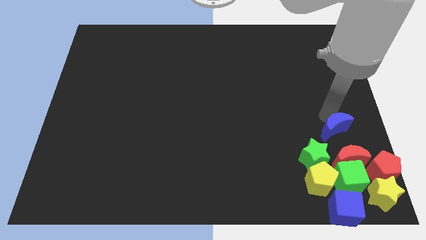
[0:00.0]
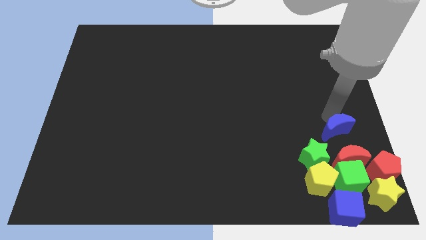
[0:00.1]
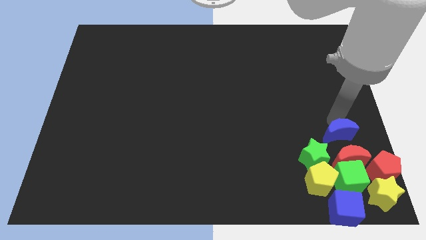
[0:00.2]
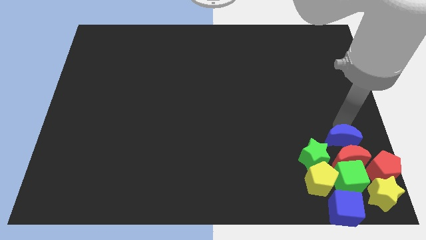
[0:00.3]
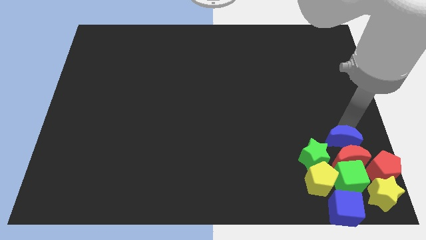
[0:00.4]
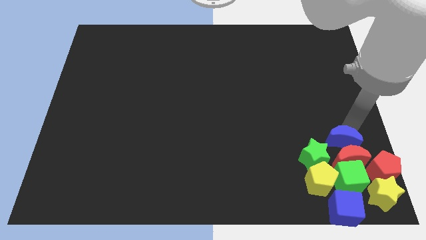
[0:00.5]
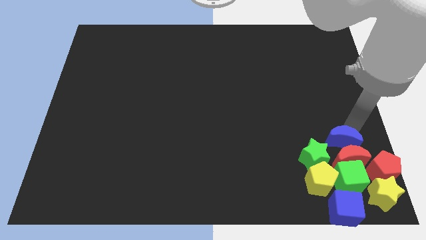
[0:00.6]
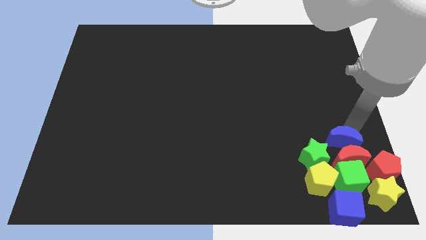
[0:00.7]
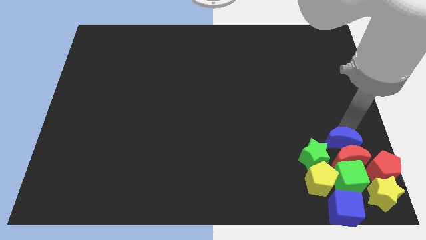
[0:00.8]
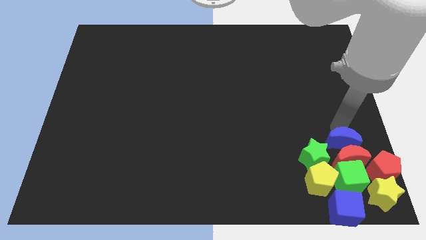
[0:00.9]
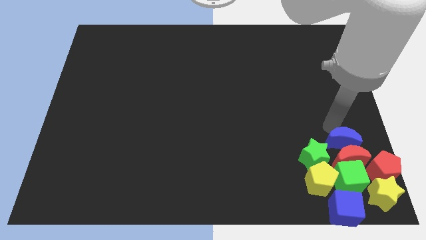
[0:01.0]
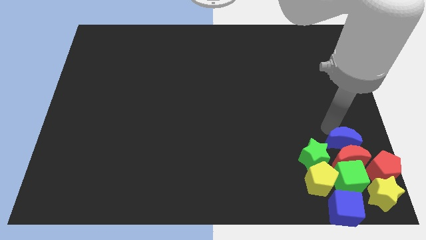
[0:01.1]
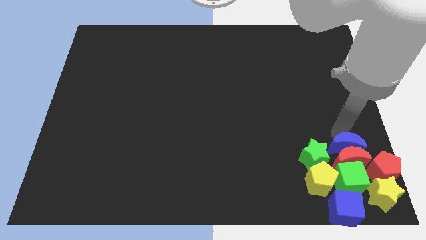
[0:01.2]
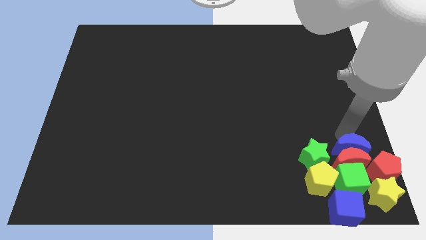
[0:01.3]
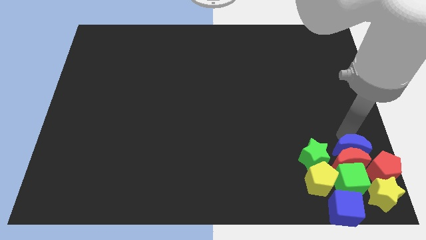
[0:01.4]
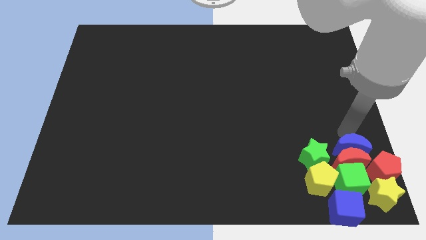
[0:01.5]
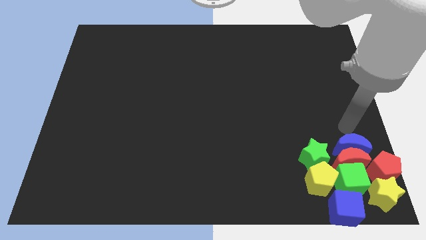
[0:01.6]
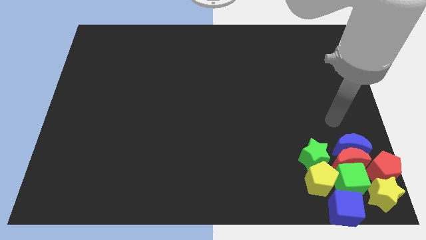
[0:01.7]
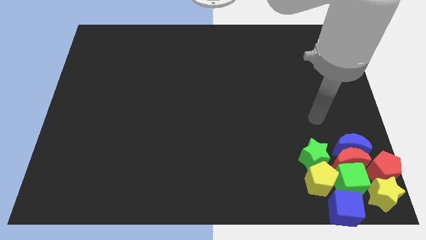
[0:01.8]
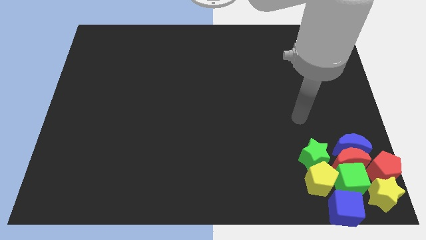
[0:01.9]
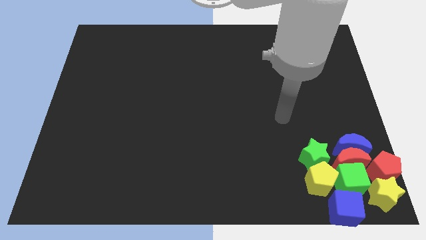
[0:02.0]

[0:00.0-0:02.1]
place the blue moon above the red moon

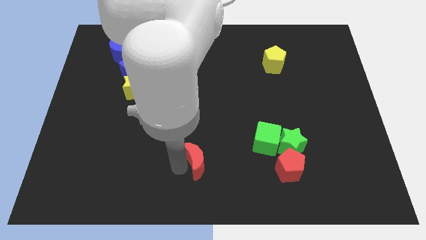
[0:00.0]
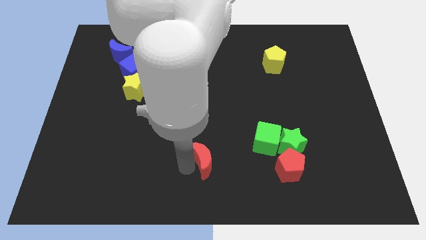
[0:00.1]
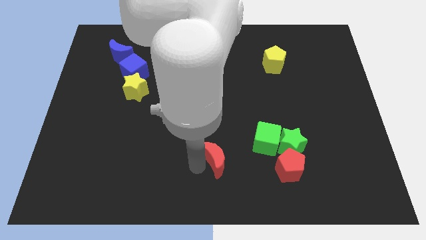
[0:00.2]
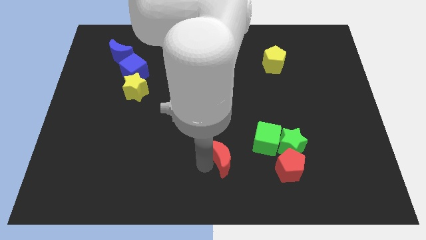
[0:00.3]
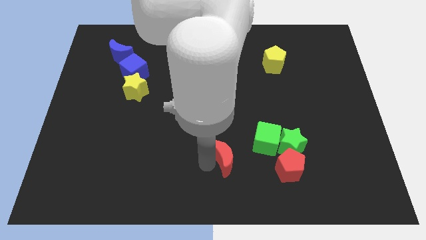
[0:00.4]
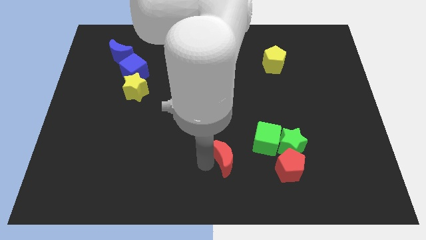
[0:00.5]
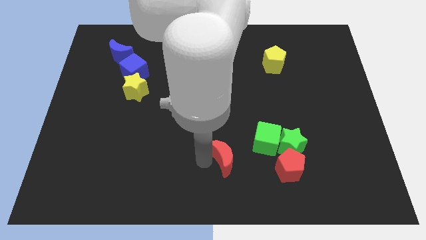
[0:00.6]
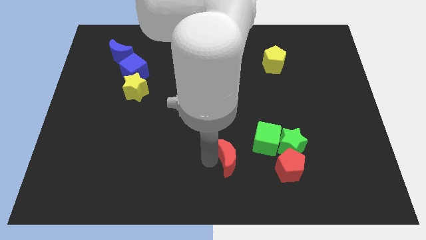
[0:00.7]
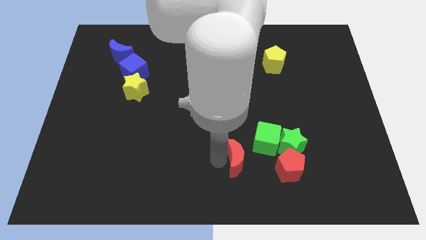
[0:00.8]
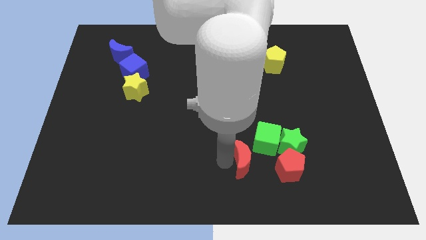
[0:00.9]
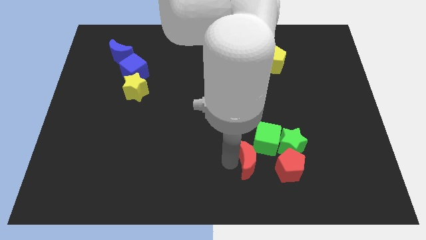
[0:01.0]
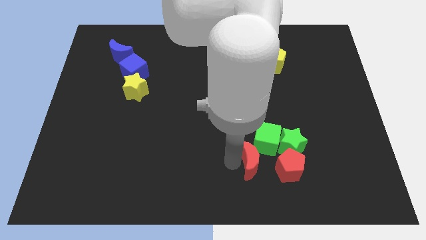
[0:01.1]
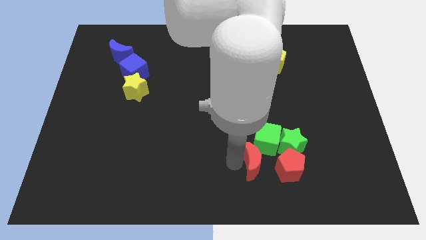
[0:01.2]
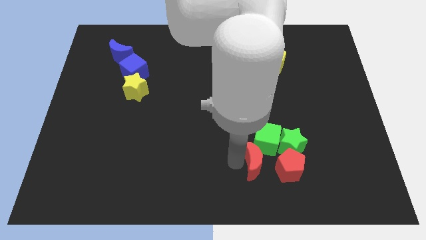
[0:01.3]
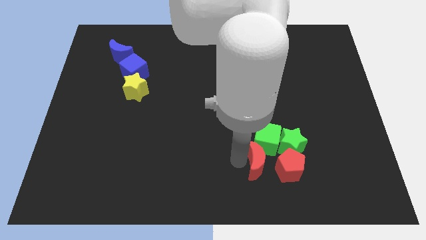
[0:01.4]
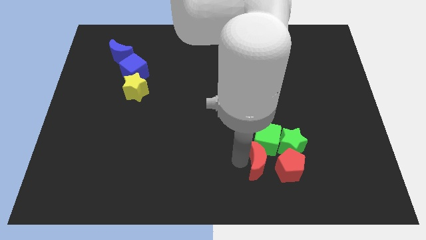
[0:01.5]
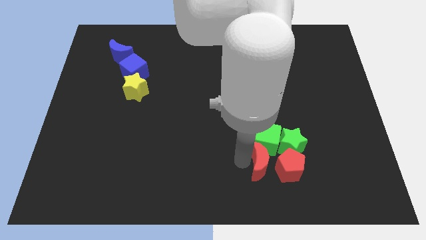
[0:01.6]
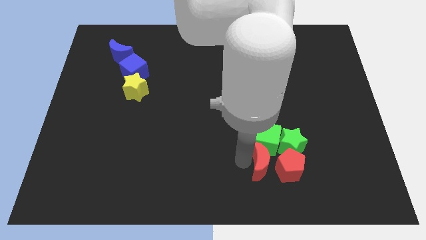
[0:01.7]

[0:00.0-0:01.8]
place the red moon below green cube

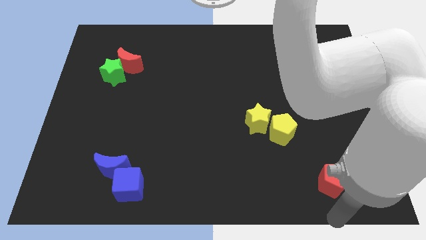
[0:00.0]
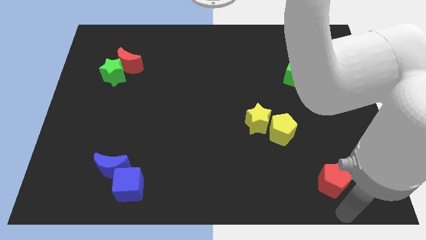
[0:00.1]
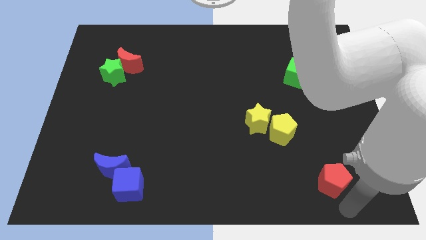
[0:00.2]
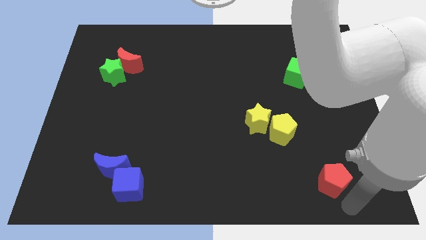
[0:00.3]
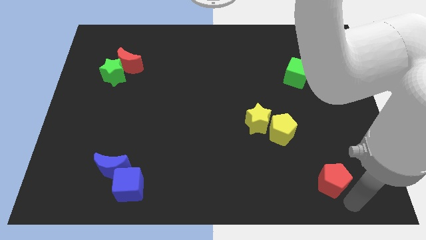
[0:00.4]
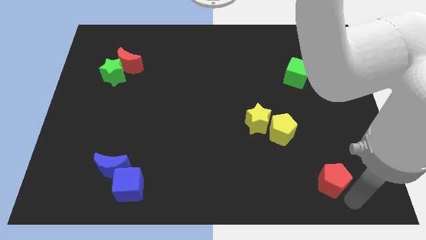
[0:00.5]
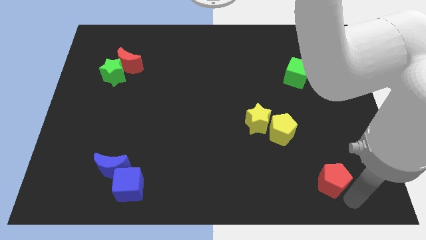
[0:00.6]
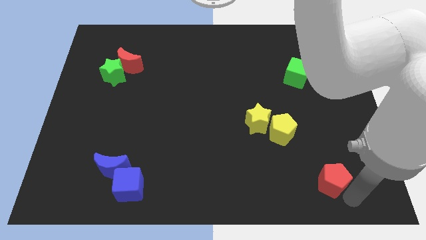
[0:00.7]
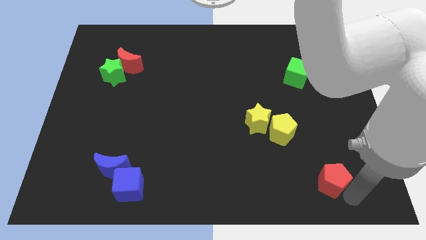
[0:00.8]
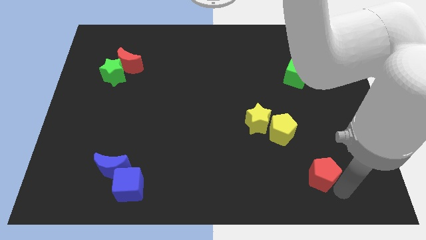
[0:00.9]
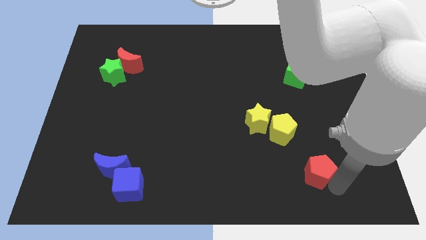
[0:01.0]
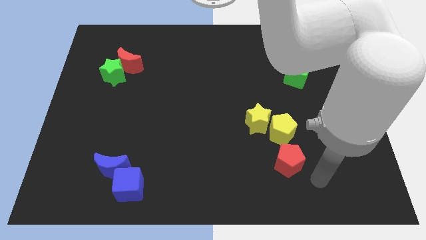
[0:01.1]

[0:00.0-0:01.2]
place the red pentagon at the bottom of yellow pentagon

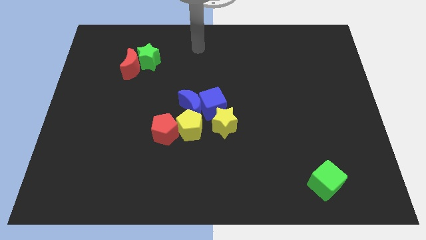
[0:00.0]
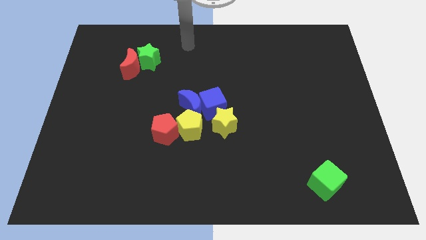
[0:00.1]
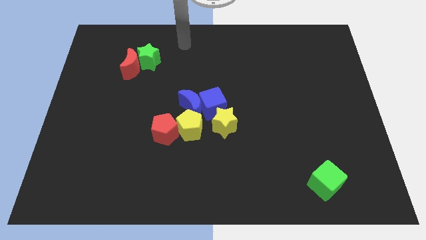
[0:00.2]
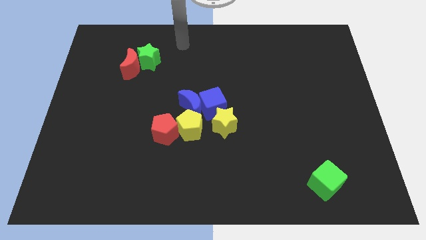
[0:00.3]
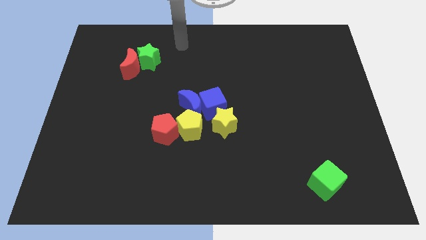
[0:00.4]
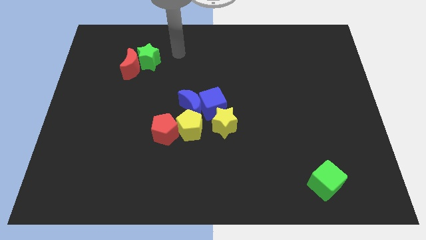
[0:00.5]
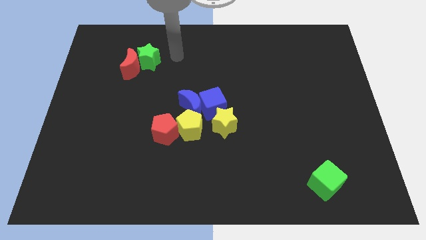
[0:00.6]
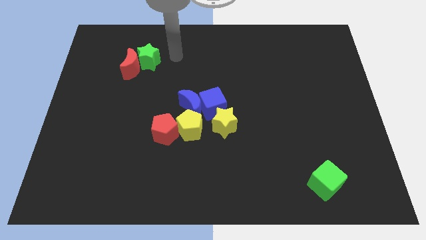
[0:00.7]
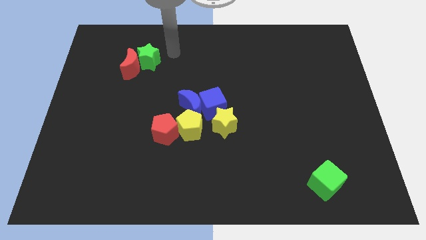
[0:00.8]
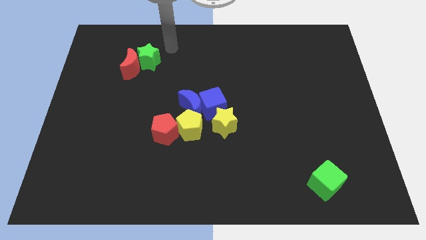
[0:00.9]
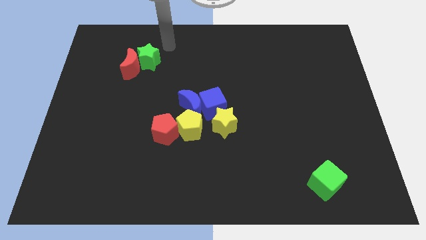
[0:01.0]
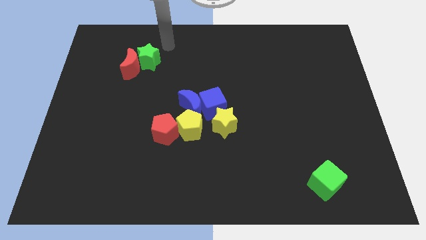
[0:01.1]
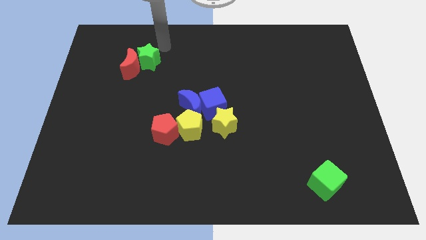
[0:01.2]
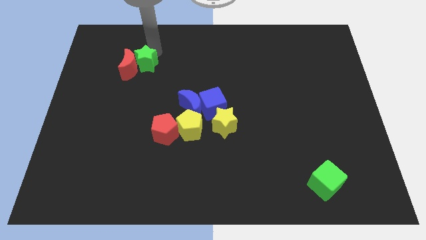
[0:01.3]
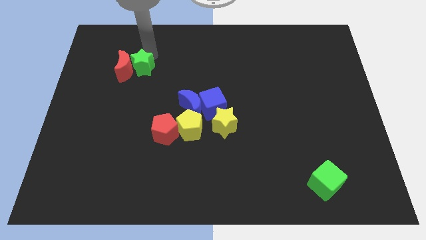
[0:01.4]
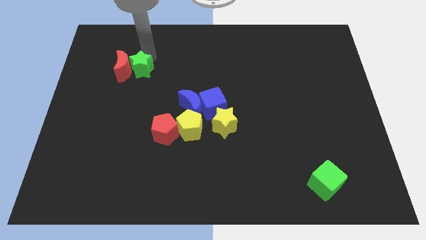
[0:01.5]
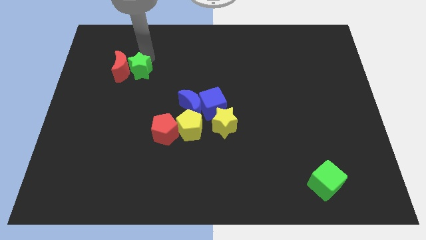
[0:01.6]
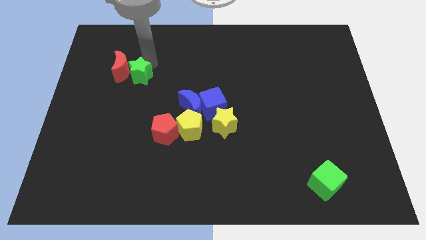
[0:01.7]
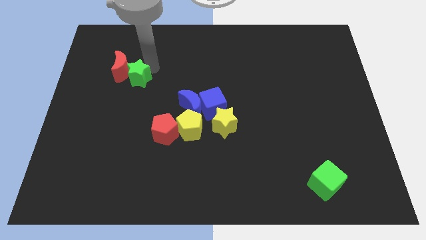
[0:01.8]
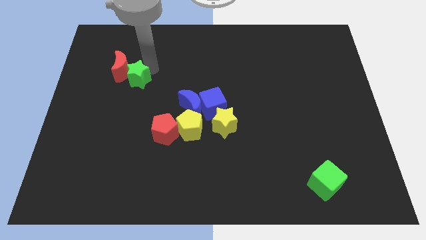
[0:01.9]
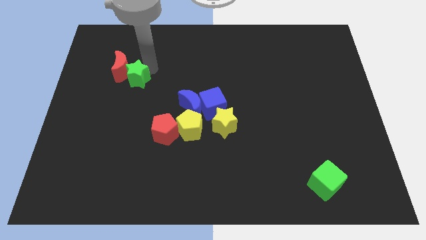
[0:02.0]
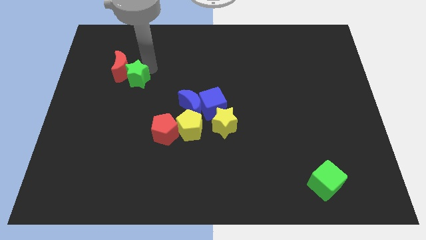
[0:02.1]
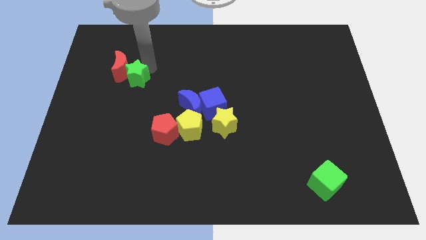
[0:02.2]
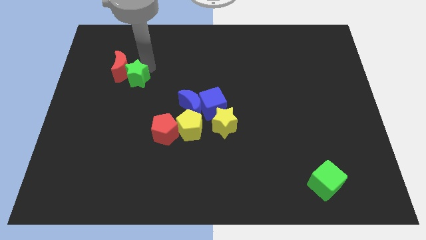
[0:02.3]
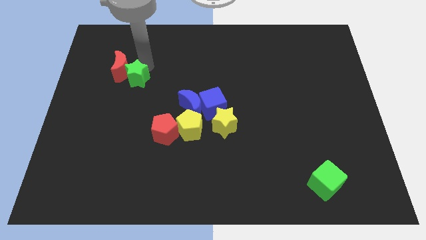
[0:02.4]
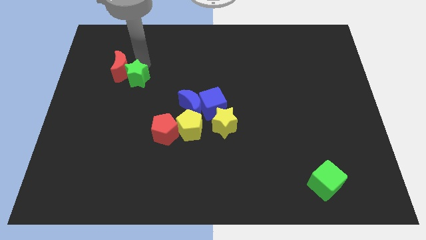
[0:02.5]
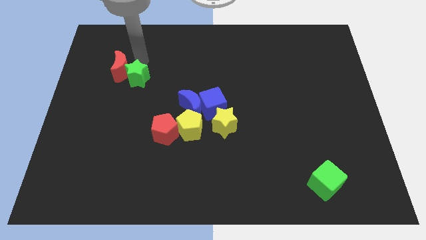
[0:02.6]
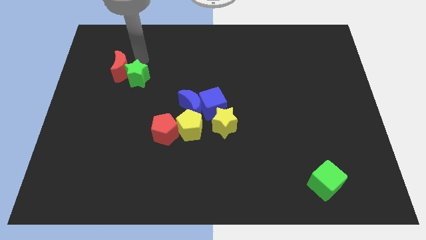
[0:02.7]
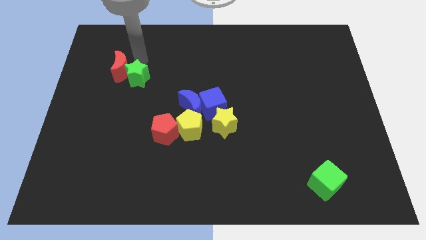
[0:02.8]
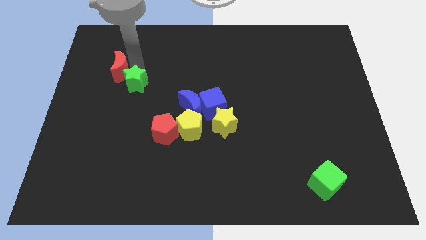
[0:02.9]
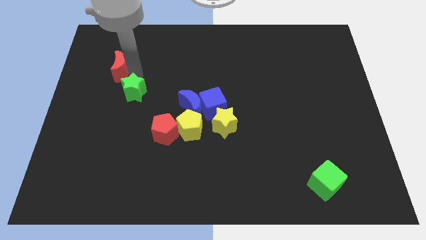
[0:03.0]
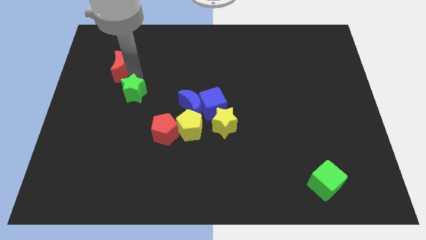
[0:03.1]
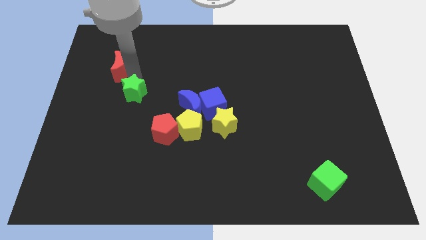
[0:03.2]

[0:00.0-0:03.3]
separate the green star from the red moon

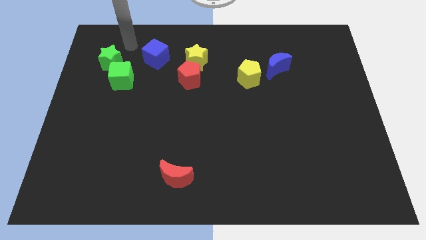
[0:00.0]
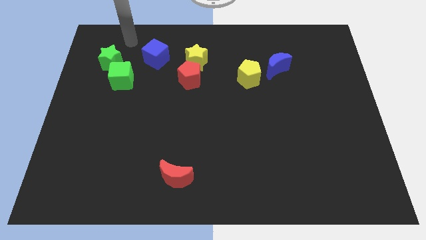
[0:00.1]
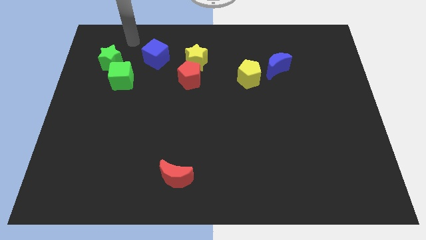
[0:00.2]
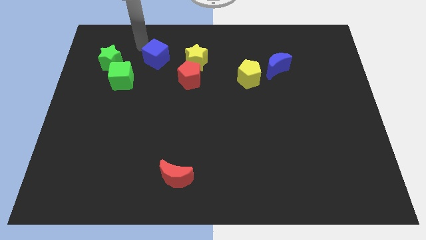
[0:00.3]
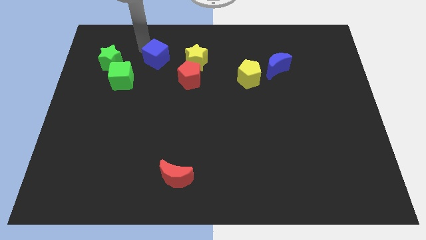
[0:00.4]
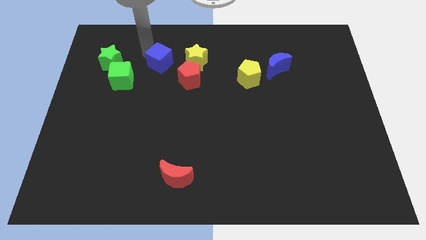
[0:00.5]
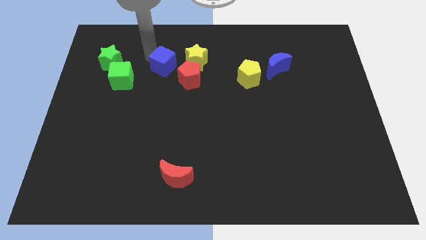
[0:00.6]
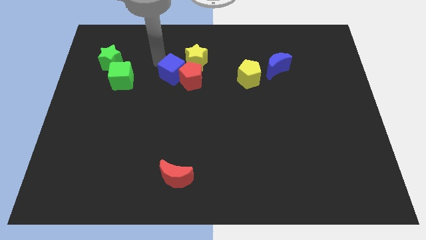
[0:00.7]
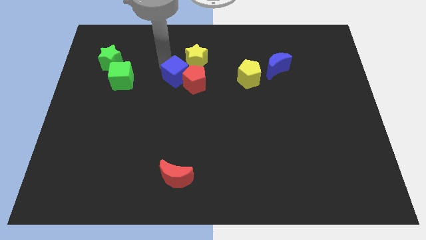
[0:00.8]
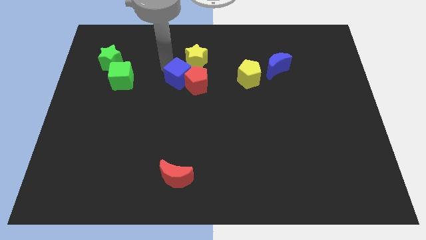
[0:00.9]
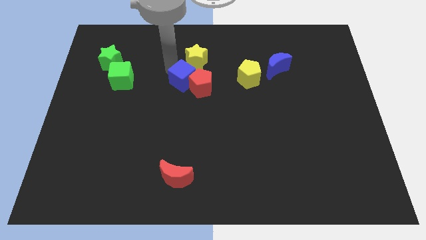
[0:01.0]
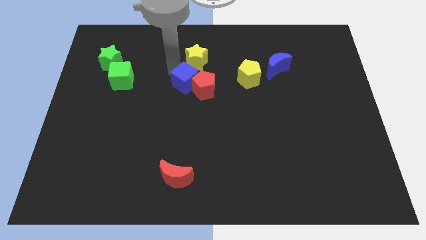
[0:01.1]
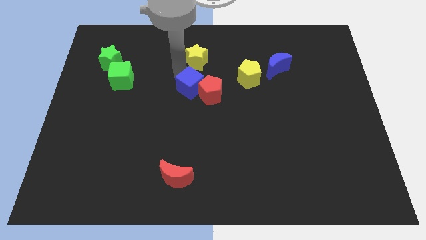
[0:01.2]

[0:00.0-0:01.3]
push the blue cube into the red pentagon
